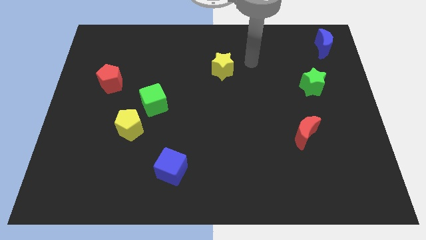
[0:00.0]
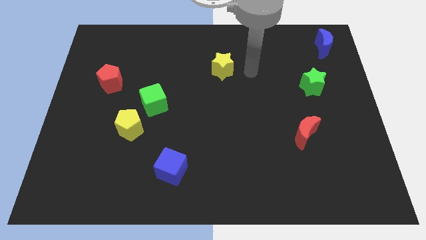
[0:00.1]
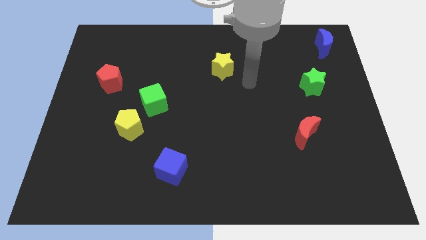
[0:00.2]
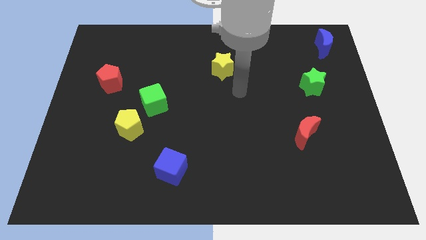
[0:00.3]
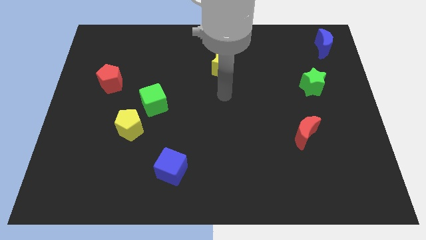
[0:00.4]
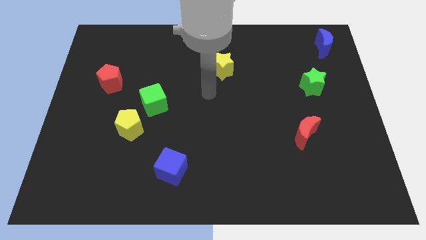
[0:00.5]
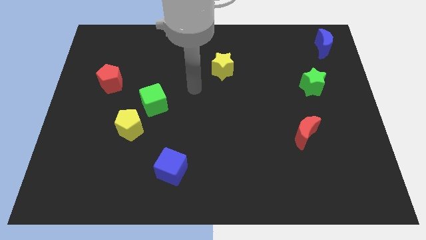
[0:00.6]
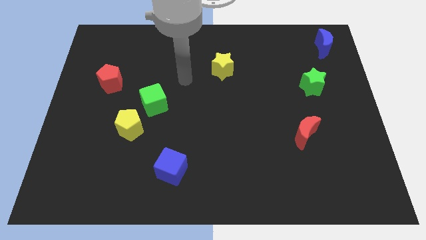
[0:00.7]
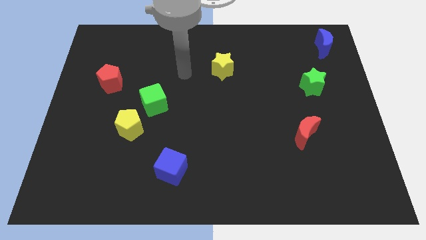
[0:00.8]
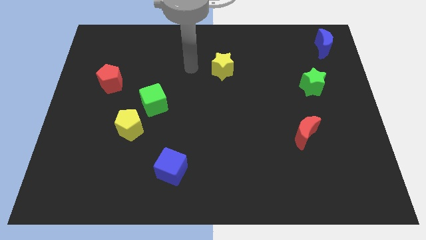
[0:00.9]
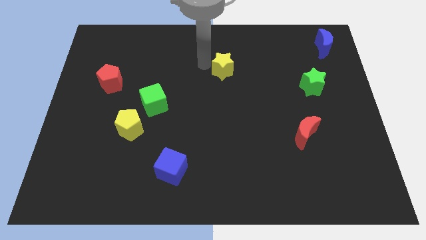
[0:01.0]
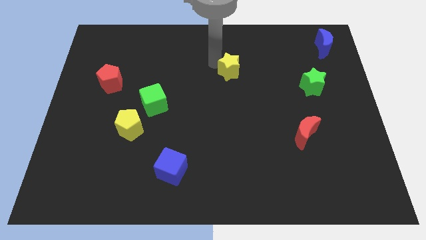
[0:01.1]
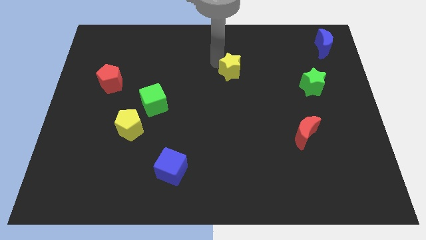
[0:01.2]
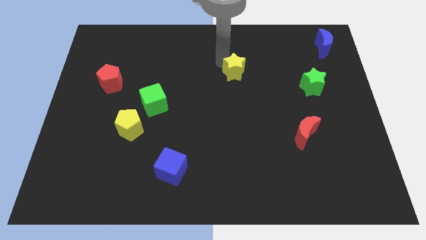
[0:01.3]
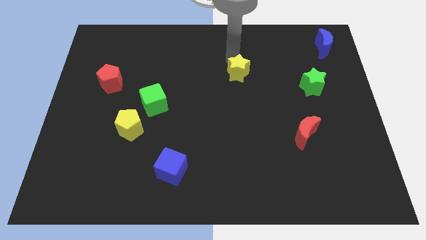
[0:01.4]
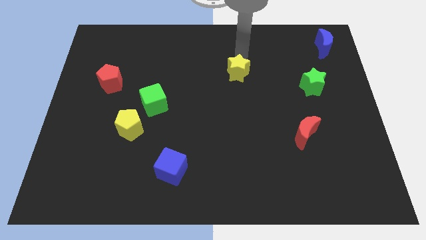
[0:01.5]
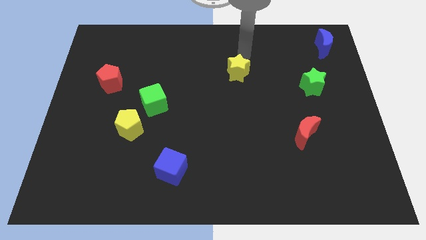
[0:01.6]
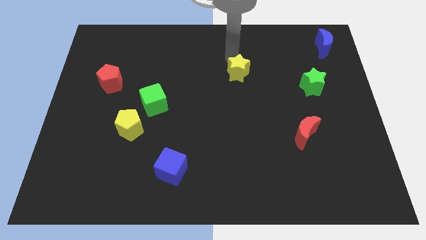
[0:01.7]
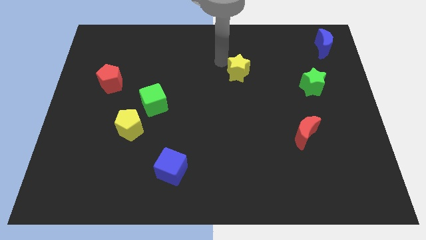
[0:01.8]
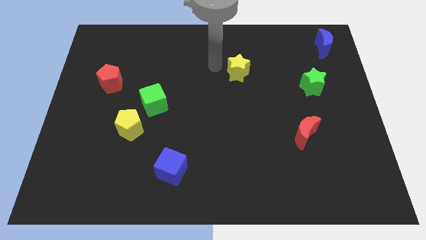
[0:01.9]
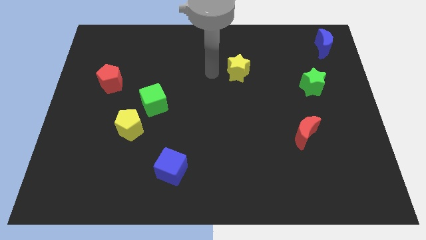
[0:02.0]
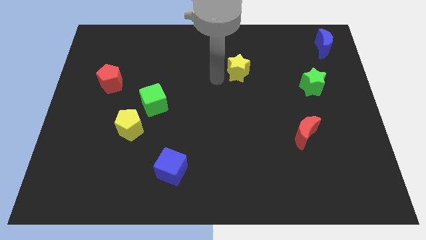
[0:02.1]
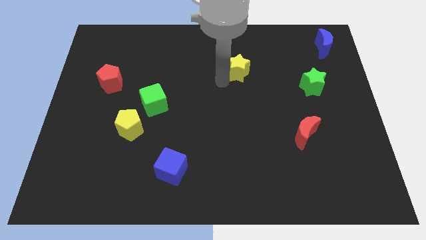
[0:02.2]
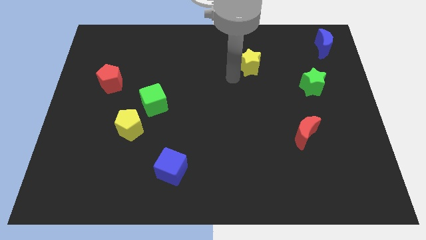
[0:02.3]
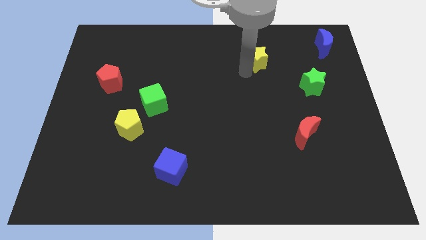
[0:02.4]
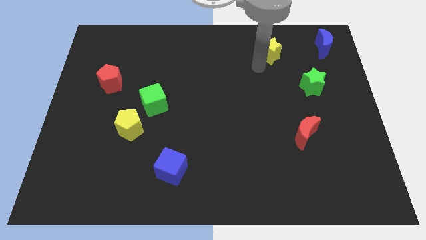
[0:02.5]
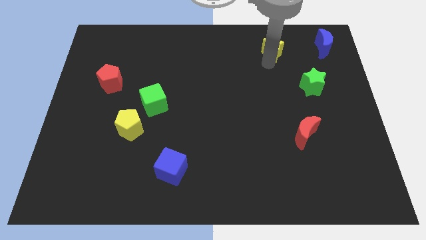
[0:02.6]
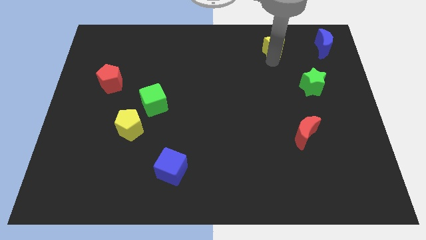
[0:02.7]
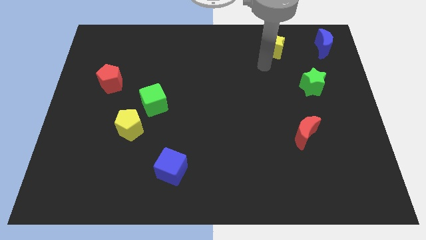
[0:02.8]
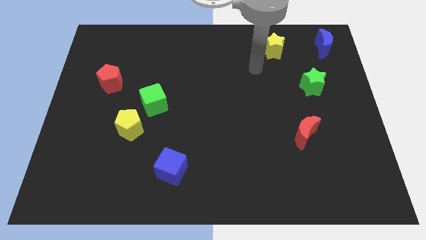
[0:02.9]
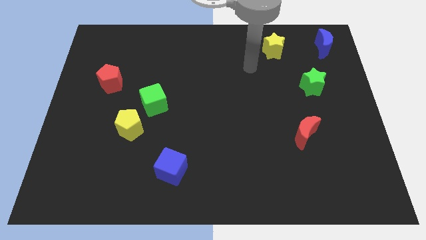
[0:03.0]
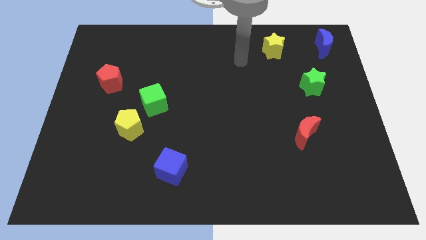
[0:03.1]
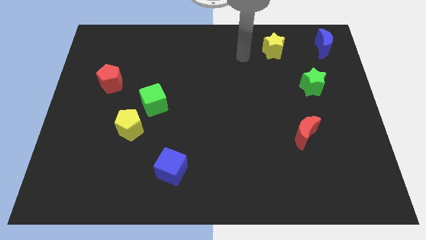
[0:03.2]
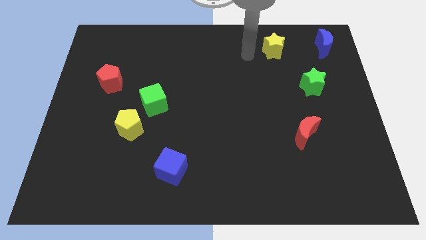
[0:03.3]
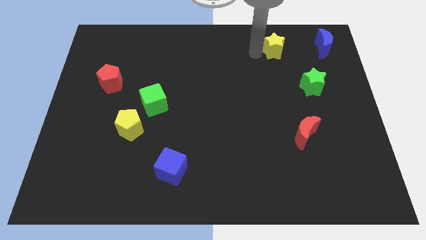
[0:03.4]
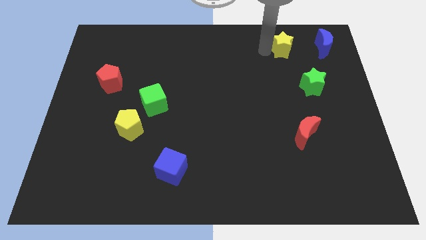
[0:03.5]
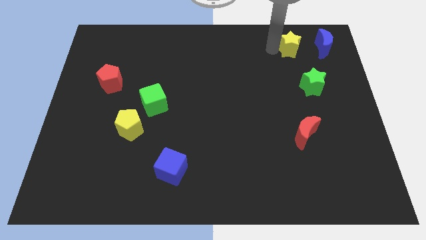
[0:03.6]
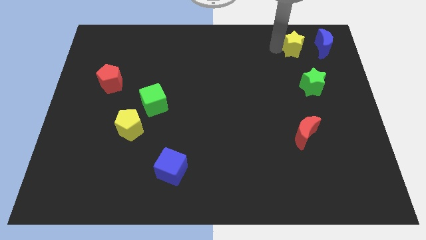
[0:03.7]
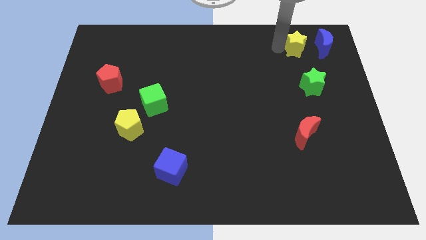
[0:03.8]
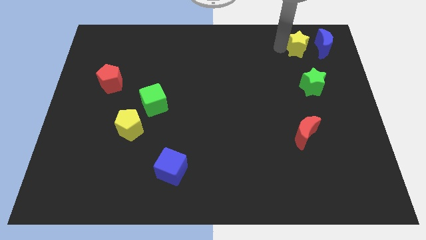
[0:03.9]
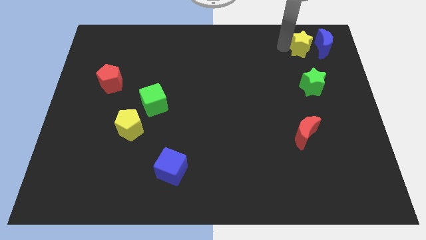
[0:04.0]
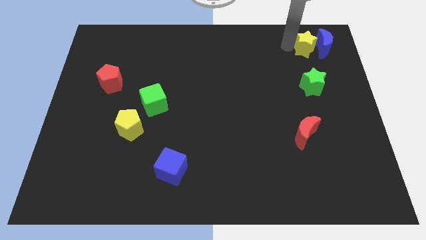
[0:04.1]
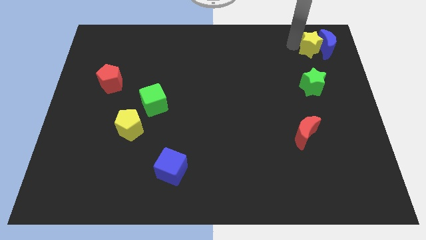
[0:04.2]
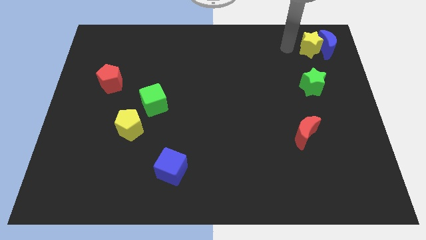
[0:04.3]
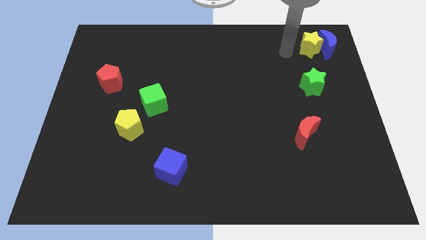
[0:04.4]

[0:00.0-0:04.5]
move the yellow star into the blue moon

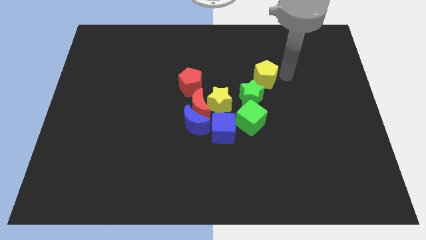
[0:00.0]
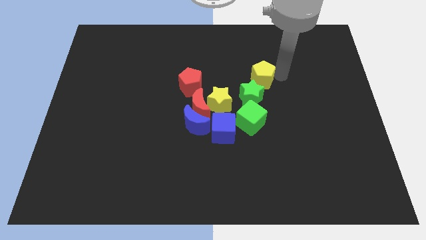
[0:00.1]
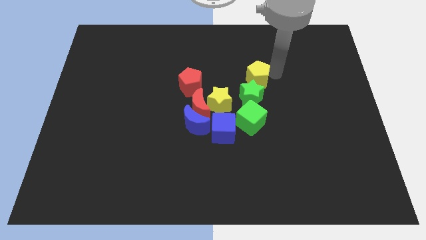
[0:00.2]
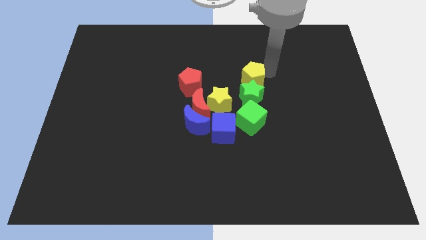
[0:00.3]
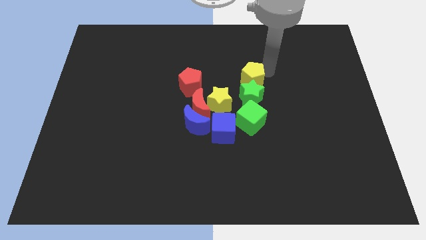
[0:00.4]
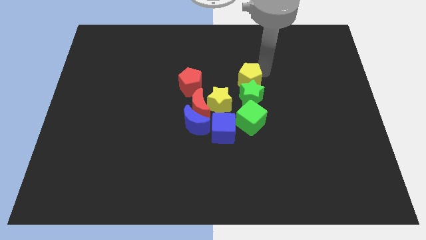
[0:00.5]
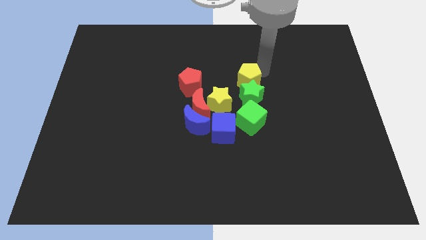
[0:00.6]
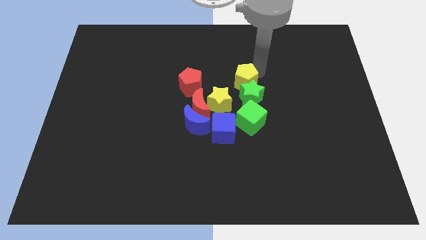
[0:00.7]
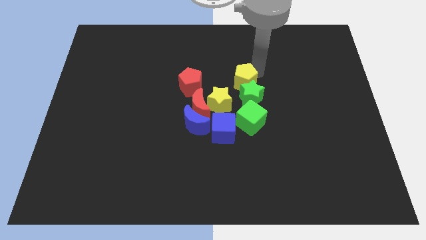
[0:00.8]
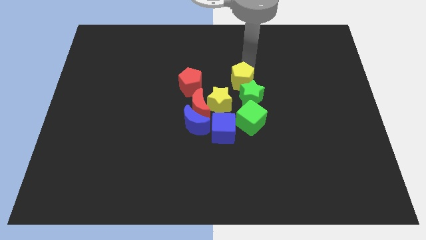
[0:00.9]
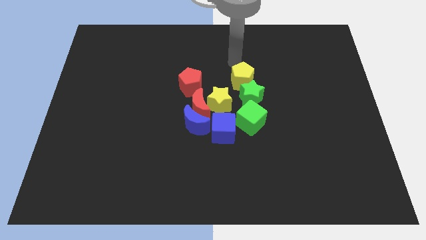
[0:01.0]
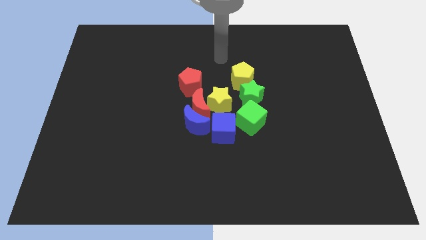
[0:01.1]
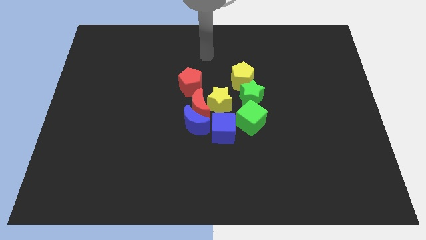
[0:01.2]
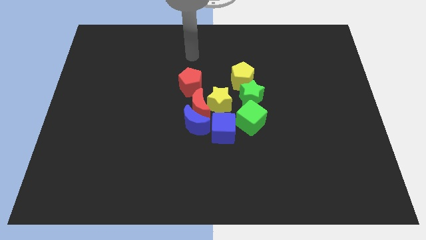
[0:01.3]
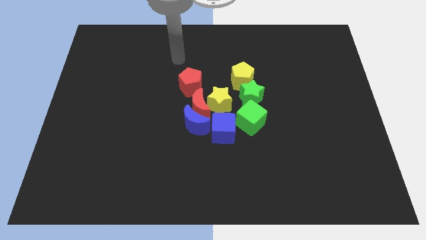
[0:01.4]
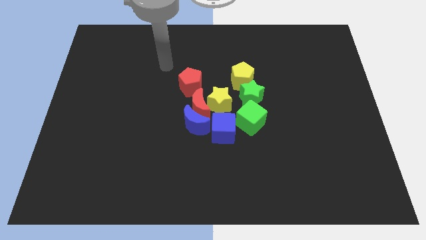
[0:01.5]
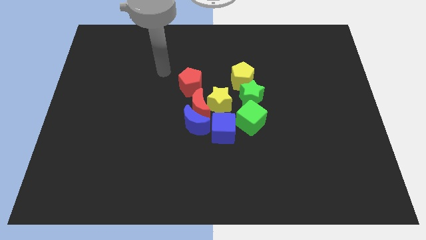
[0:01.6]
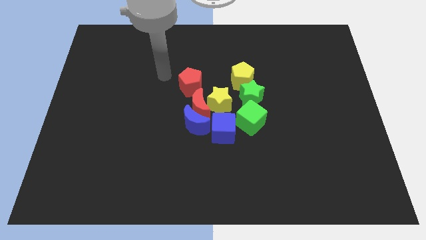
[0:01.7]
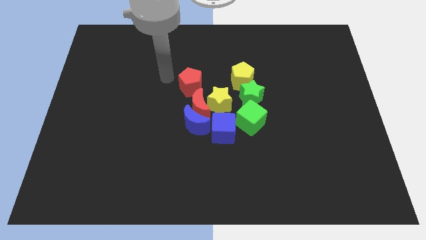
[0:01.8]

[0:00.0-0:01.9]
adjust the yellow pentagon above the green star

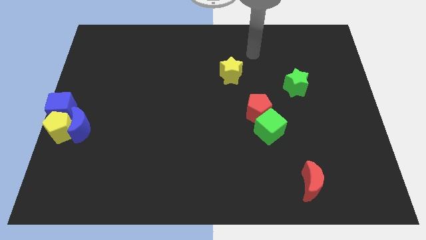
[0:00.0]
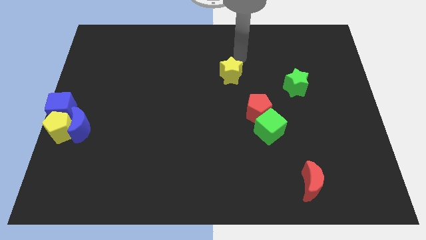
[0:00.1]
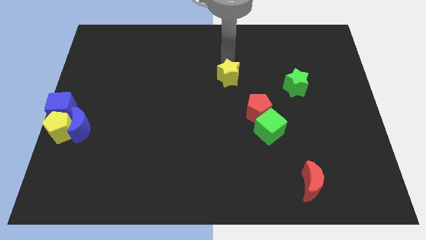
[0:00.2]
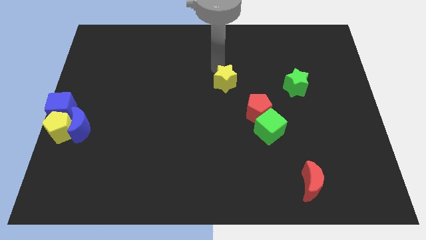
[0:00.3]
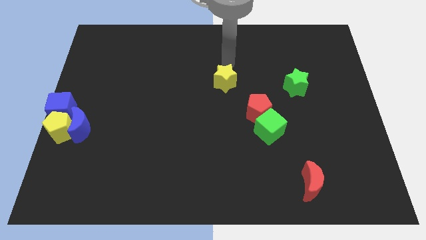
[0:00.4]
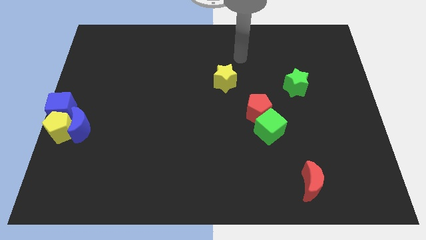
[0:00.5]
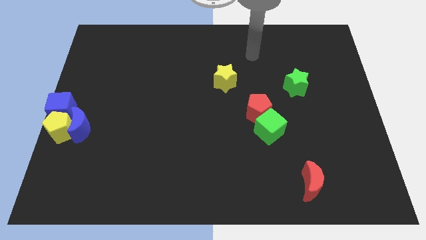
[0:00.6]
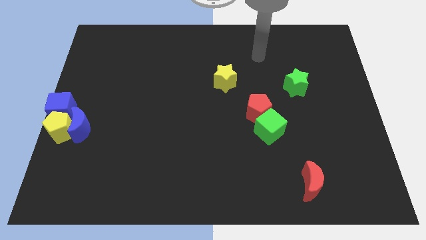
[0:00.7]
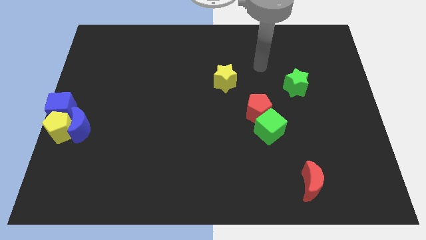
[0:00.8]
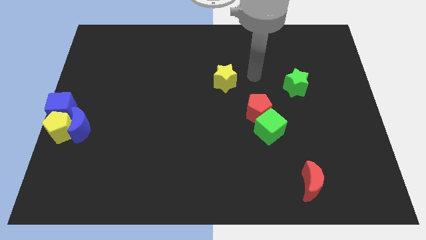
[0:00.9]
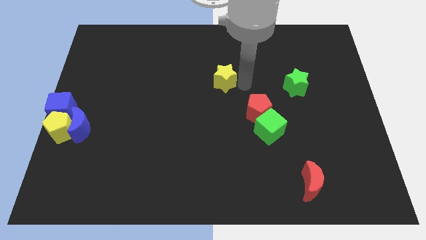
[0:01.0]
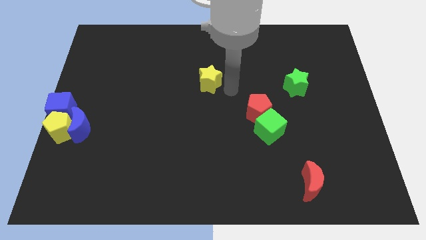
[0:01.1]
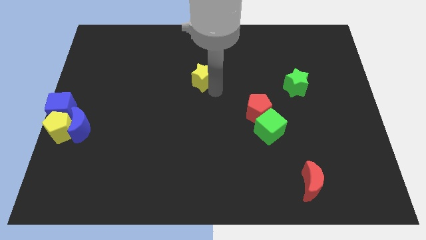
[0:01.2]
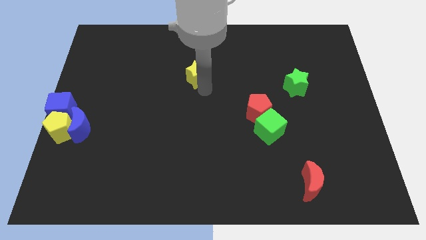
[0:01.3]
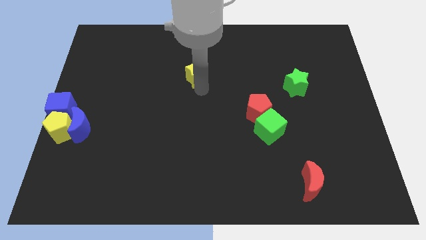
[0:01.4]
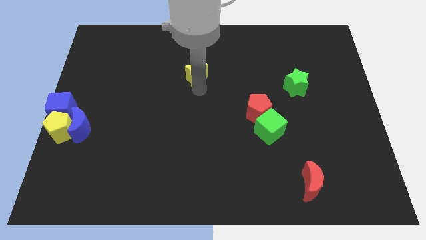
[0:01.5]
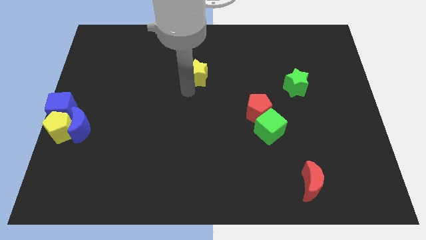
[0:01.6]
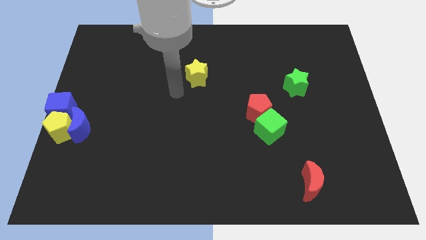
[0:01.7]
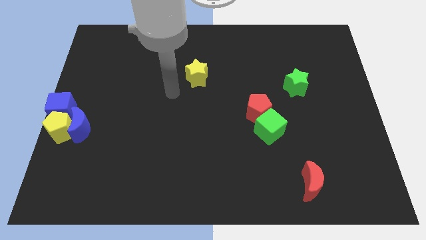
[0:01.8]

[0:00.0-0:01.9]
push the yellow star diagonally on the top left side of the red pentagon

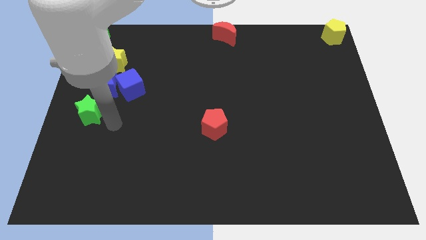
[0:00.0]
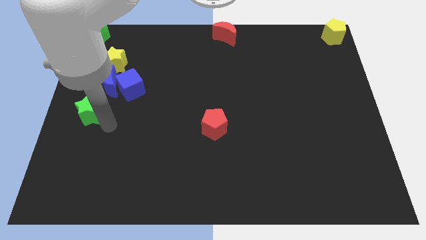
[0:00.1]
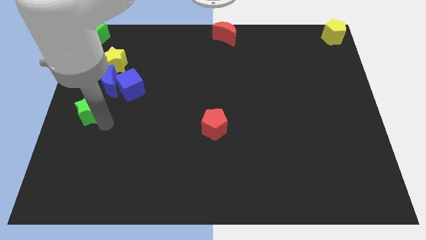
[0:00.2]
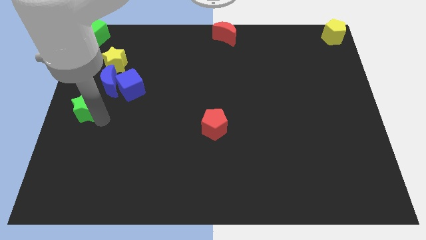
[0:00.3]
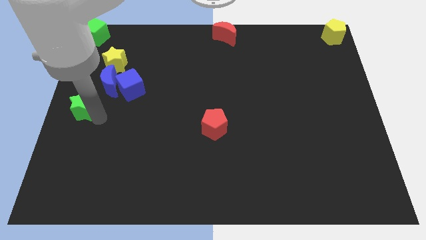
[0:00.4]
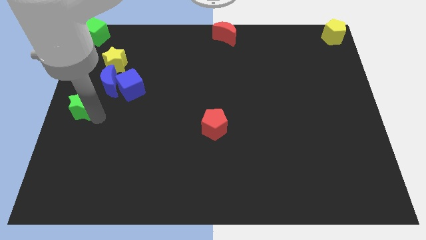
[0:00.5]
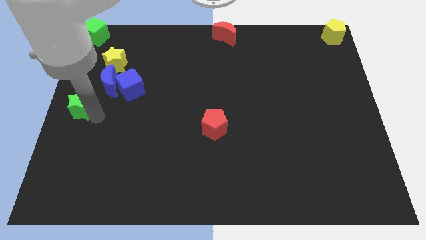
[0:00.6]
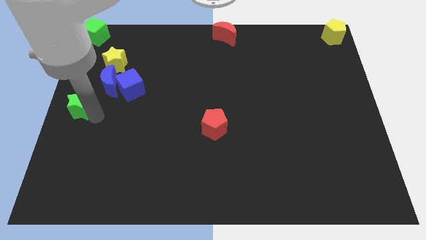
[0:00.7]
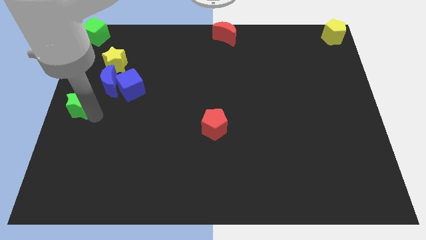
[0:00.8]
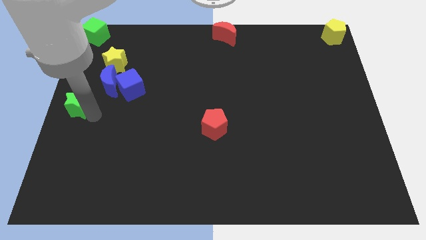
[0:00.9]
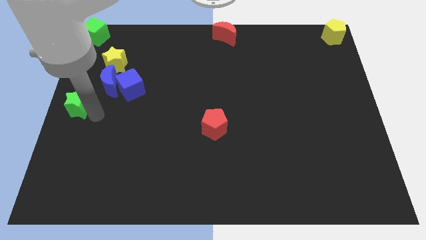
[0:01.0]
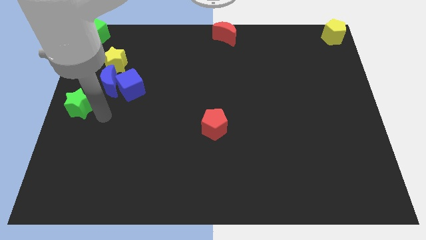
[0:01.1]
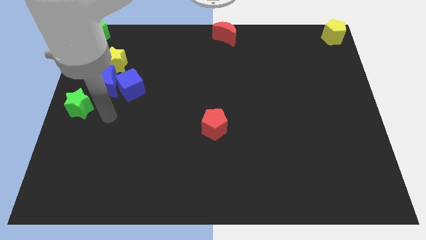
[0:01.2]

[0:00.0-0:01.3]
push the green star towards the left center of the board
